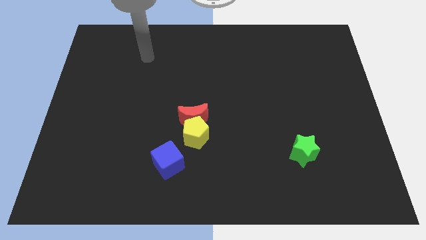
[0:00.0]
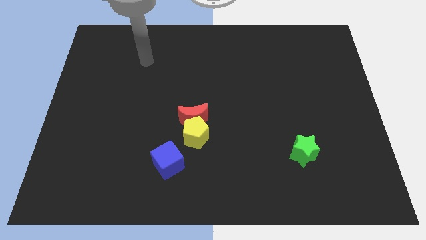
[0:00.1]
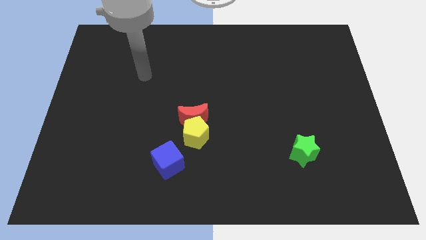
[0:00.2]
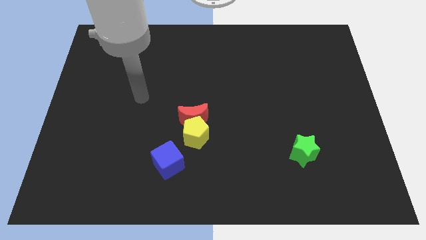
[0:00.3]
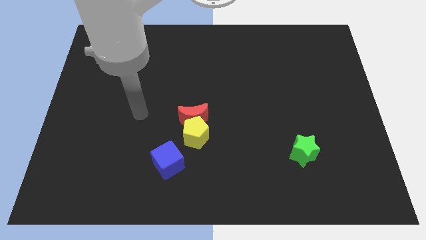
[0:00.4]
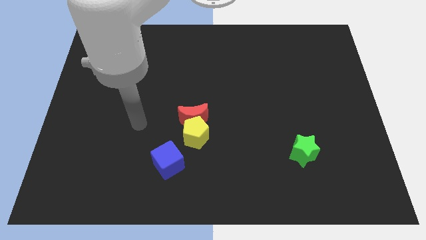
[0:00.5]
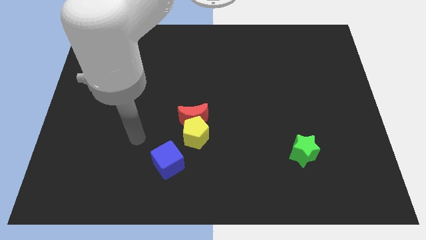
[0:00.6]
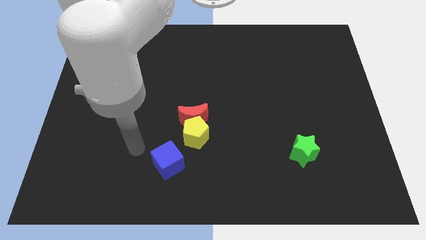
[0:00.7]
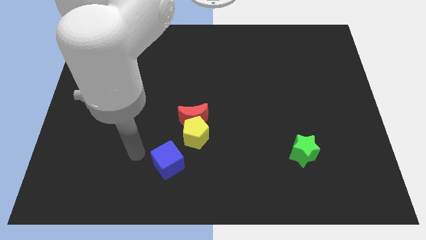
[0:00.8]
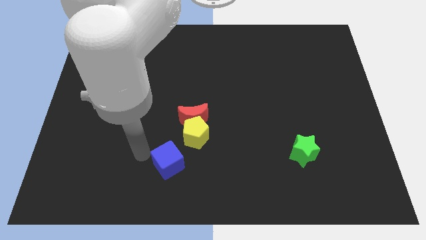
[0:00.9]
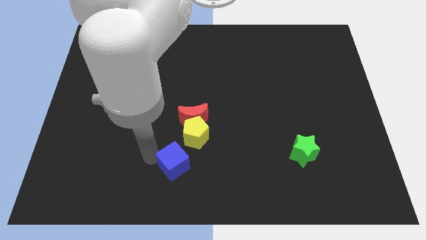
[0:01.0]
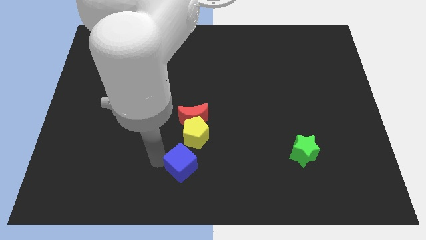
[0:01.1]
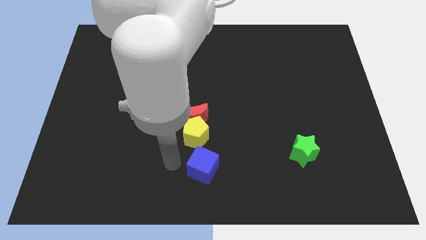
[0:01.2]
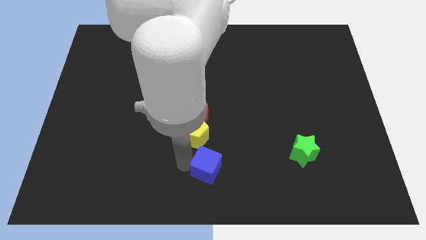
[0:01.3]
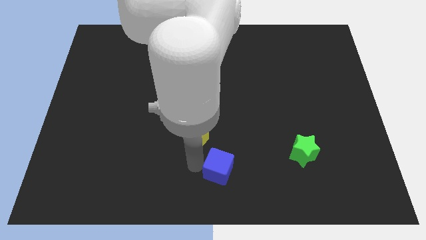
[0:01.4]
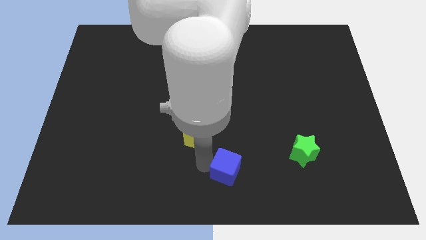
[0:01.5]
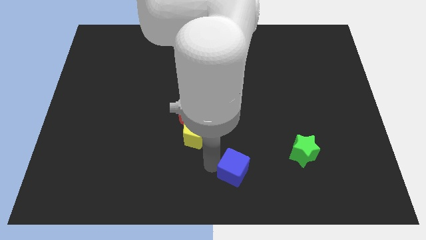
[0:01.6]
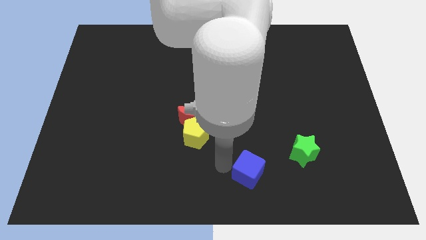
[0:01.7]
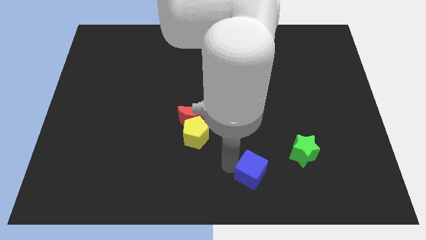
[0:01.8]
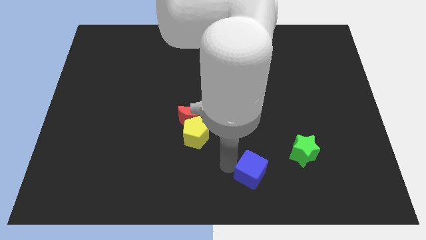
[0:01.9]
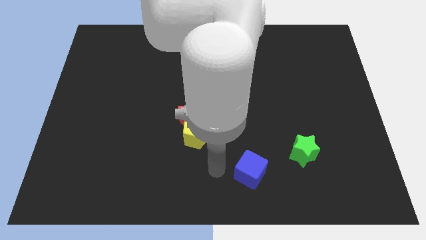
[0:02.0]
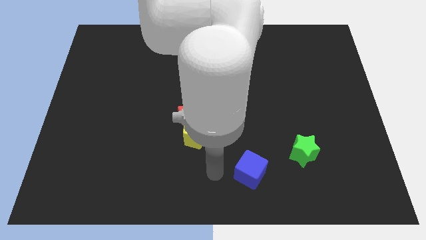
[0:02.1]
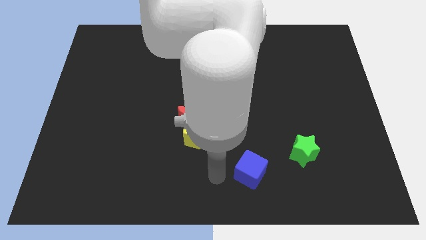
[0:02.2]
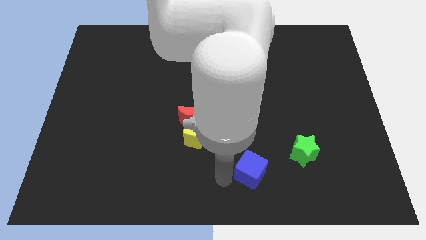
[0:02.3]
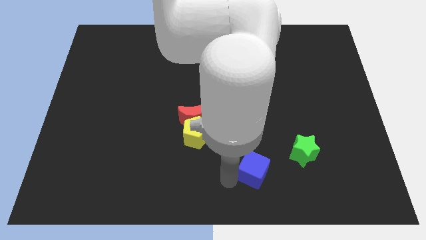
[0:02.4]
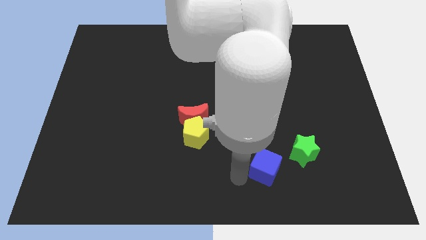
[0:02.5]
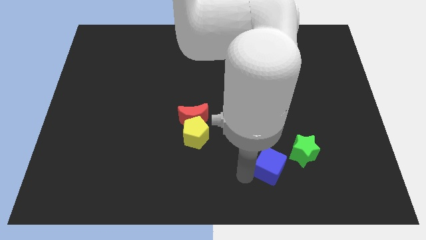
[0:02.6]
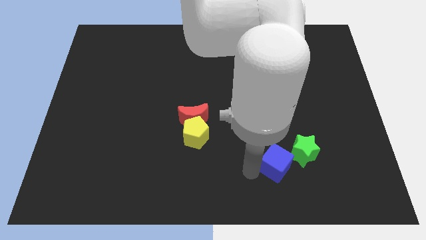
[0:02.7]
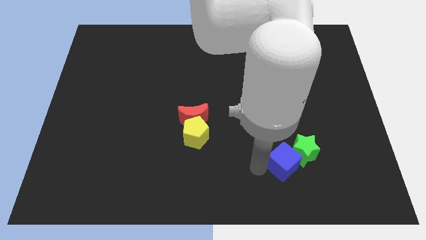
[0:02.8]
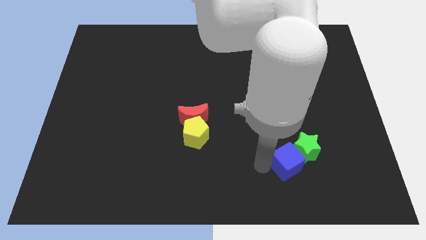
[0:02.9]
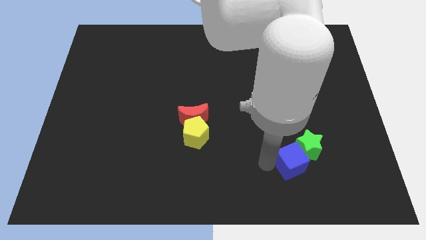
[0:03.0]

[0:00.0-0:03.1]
push the blue block next to the star

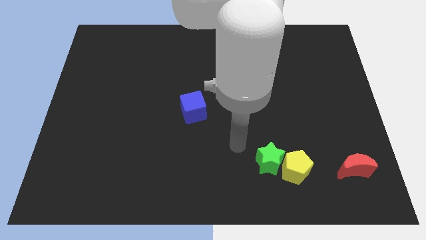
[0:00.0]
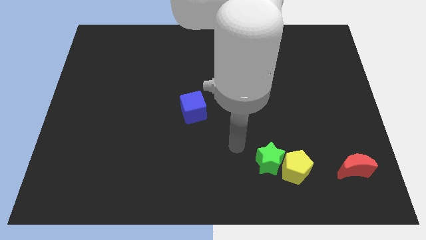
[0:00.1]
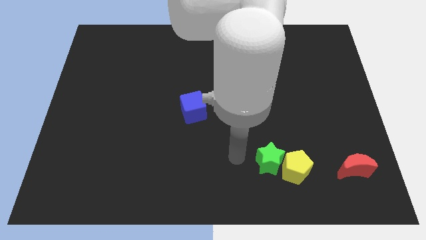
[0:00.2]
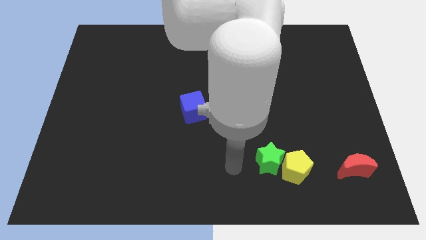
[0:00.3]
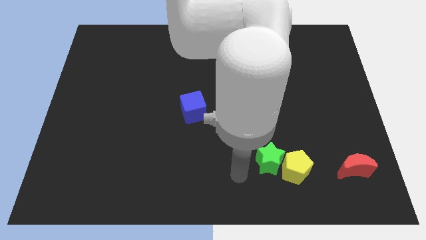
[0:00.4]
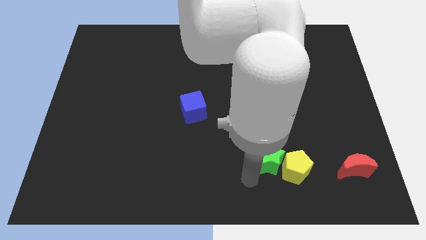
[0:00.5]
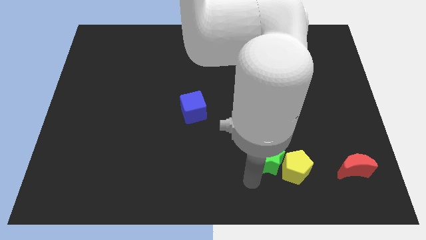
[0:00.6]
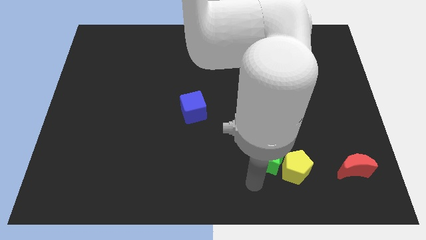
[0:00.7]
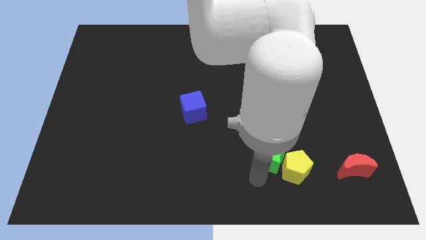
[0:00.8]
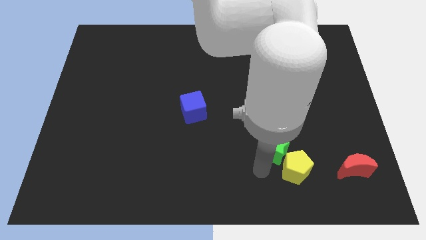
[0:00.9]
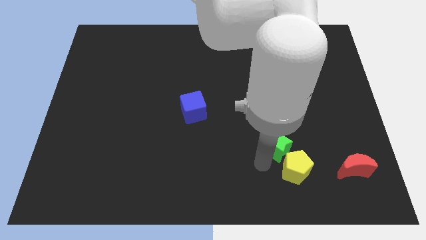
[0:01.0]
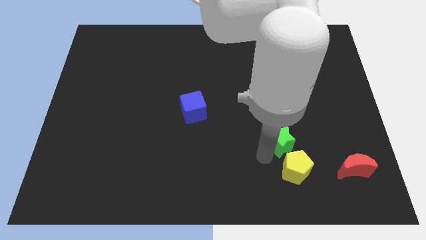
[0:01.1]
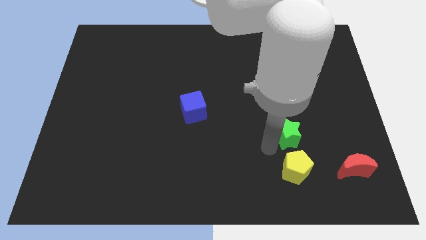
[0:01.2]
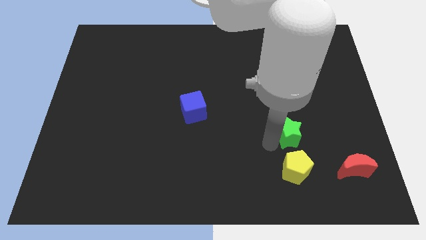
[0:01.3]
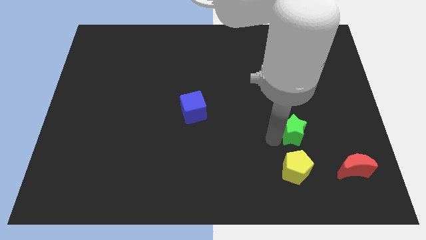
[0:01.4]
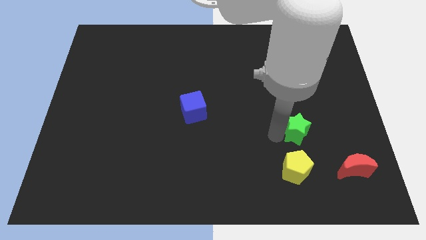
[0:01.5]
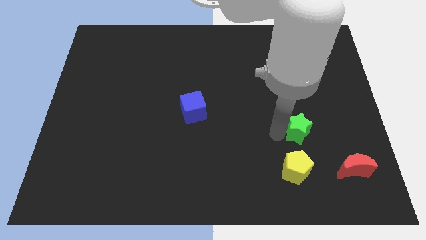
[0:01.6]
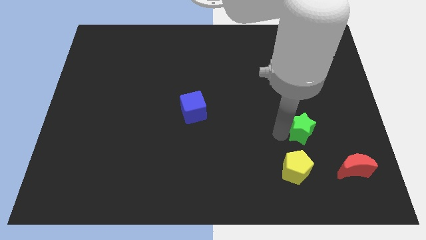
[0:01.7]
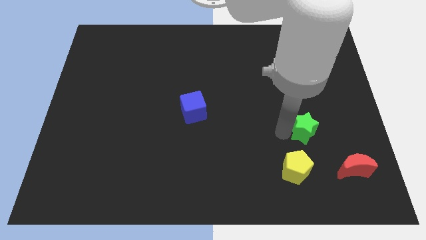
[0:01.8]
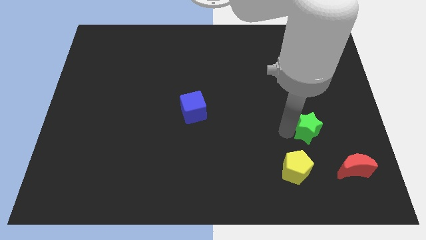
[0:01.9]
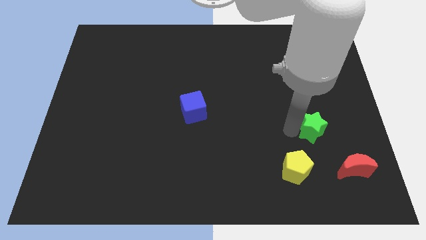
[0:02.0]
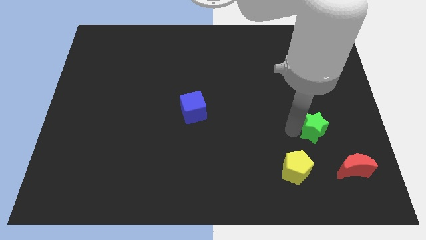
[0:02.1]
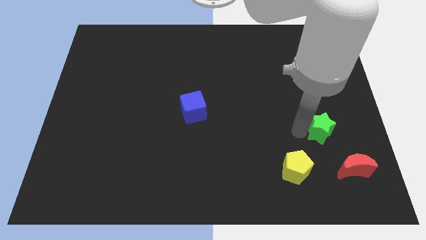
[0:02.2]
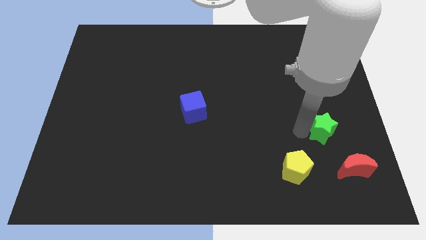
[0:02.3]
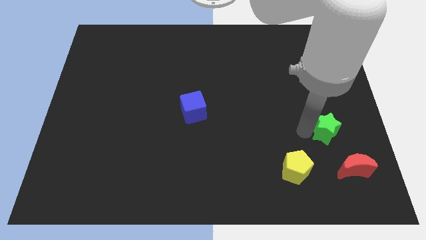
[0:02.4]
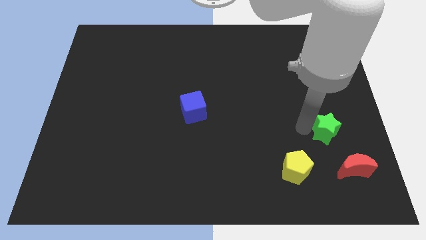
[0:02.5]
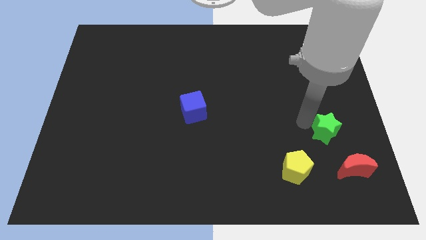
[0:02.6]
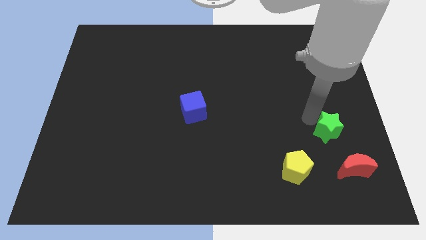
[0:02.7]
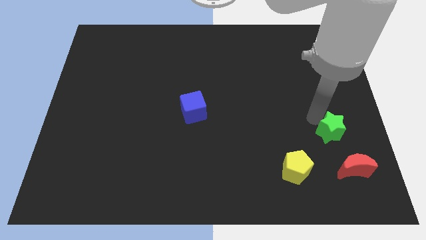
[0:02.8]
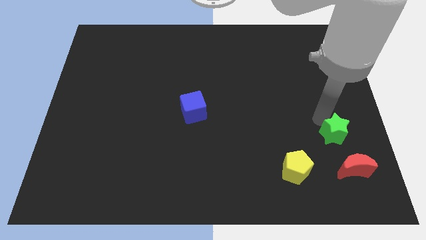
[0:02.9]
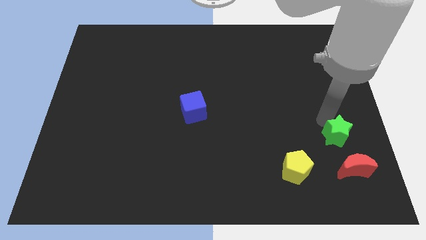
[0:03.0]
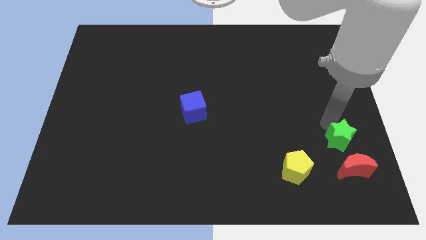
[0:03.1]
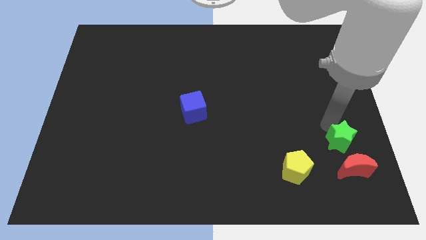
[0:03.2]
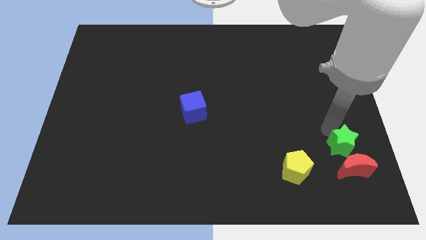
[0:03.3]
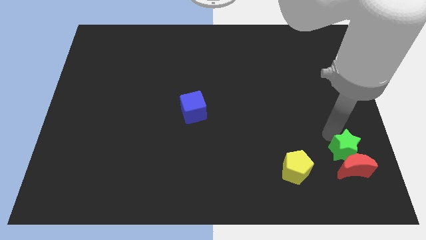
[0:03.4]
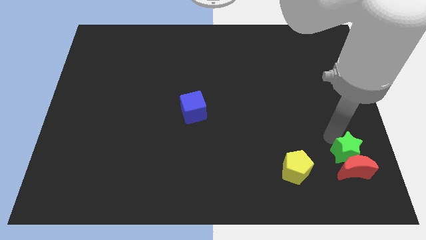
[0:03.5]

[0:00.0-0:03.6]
move the star close to the moon

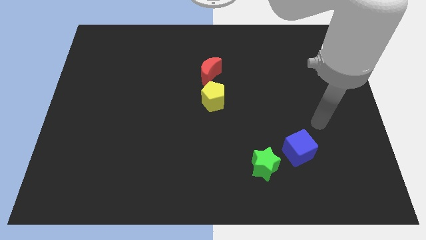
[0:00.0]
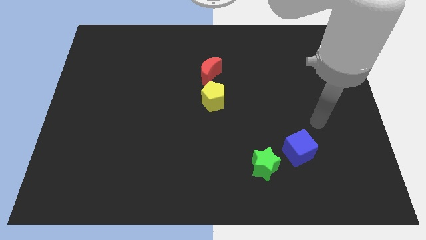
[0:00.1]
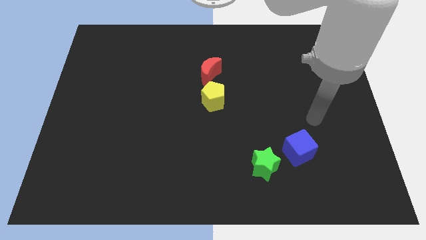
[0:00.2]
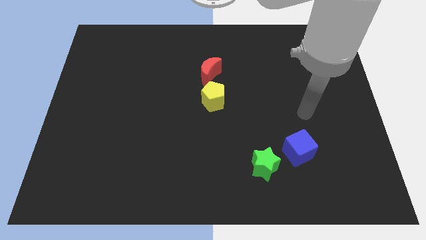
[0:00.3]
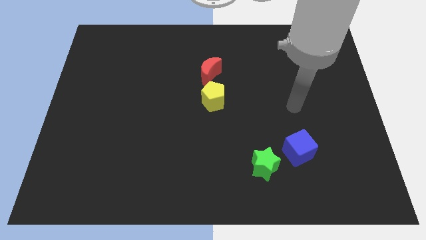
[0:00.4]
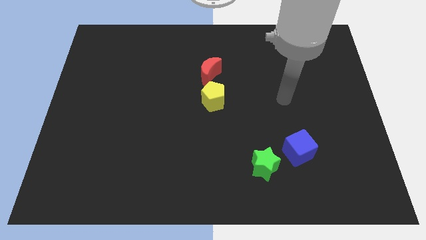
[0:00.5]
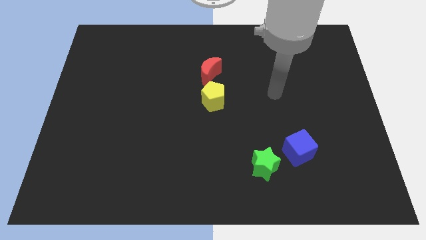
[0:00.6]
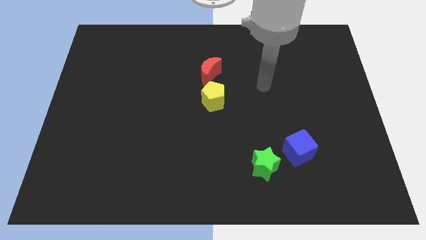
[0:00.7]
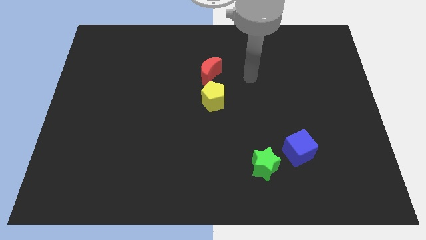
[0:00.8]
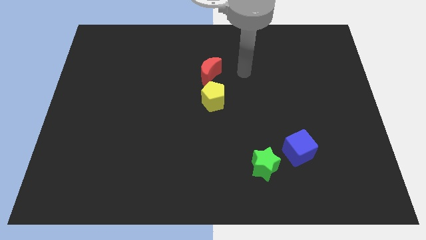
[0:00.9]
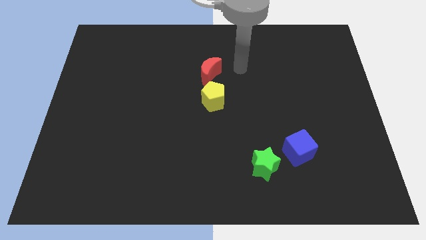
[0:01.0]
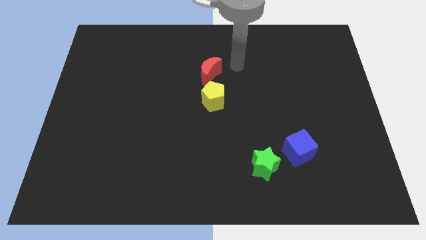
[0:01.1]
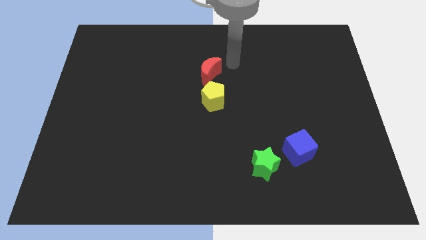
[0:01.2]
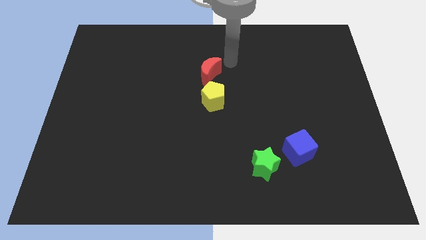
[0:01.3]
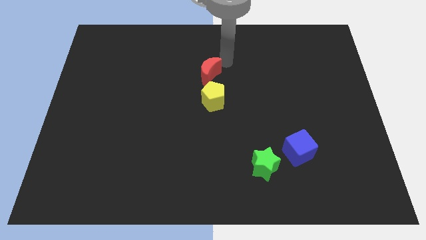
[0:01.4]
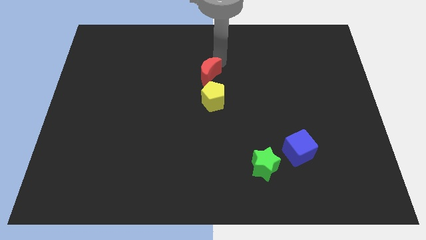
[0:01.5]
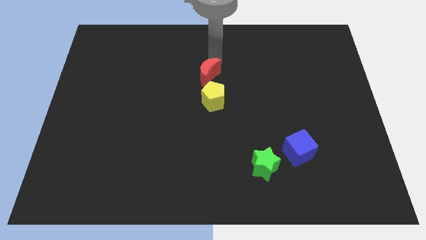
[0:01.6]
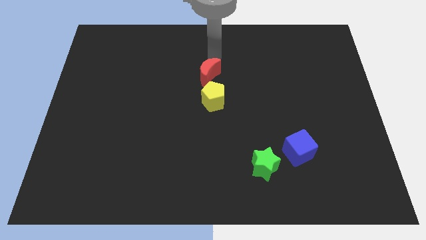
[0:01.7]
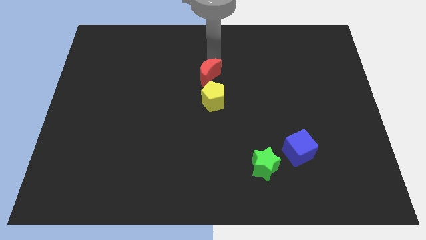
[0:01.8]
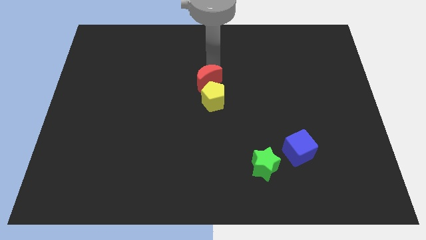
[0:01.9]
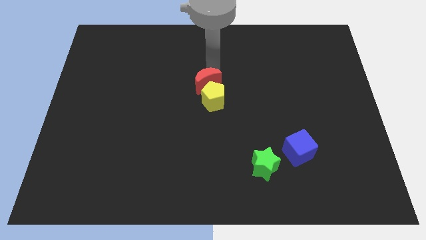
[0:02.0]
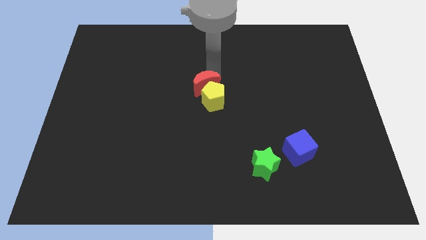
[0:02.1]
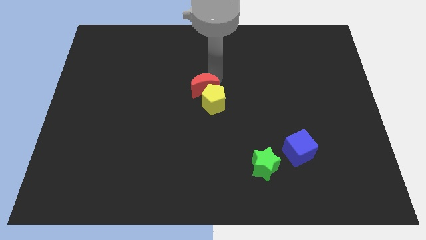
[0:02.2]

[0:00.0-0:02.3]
move the red block towards the yellow block
